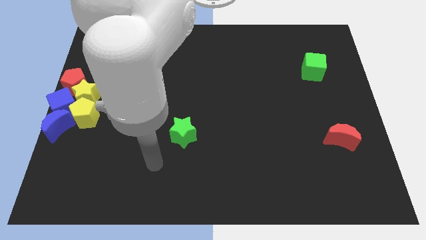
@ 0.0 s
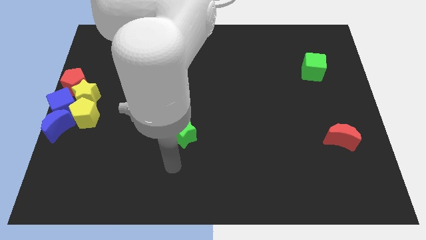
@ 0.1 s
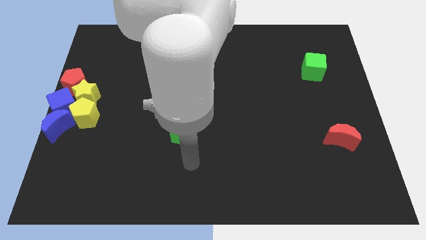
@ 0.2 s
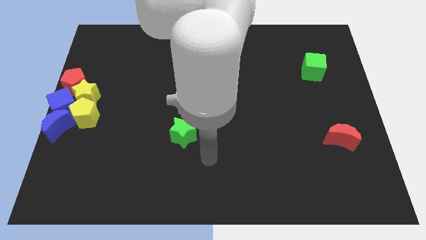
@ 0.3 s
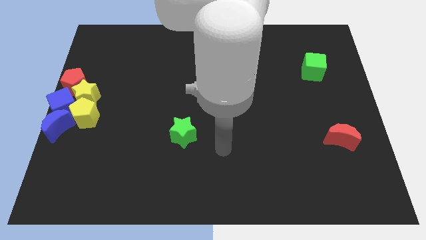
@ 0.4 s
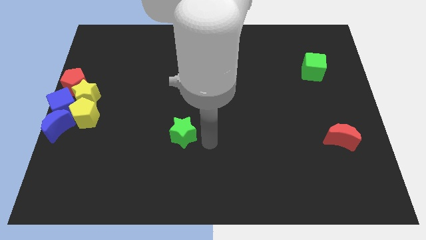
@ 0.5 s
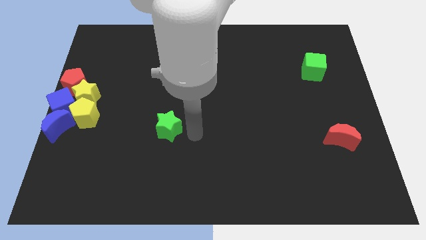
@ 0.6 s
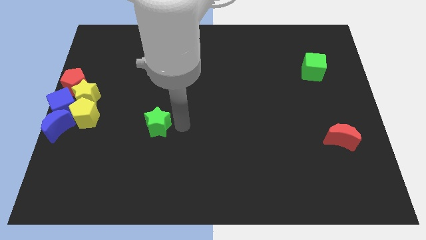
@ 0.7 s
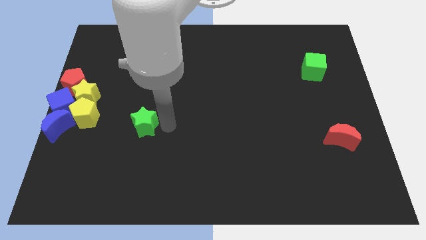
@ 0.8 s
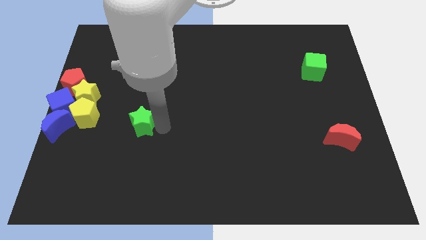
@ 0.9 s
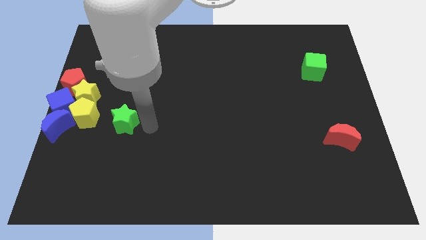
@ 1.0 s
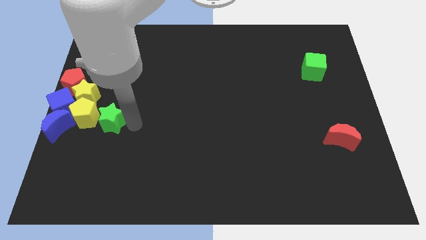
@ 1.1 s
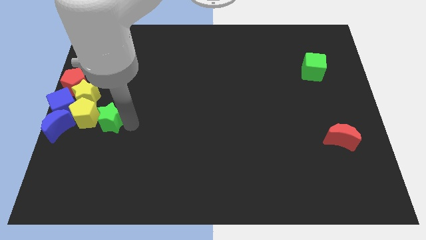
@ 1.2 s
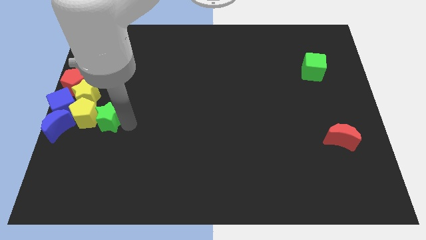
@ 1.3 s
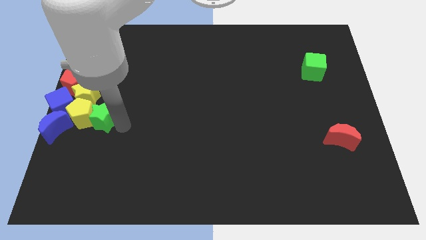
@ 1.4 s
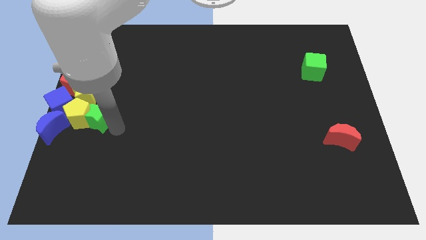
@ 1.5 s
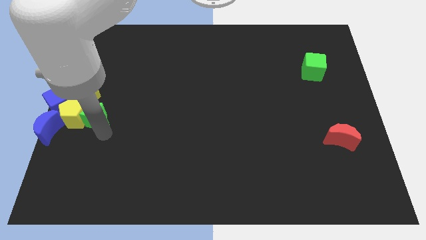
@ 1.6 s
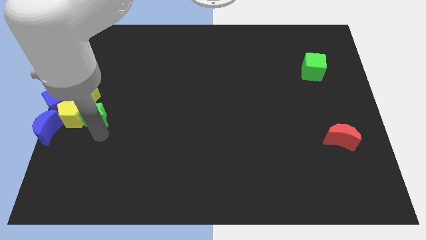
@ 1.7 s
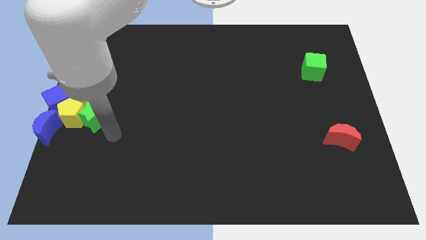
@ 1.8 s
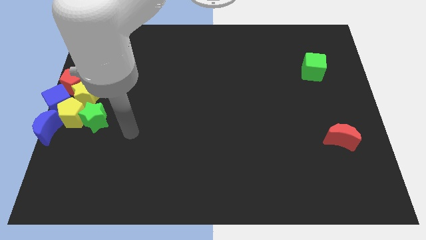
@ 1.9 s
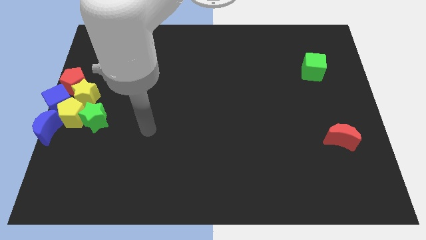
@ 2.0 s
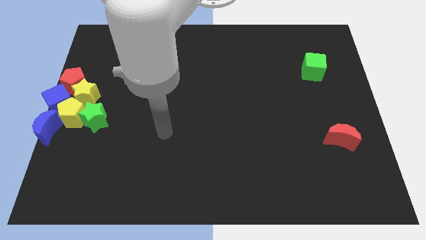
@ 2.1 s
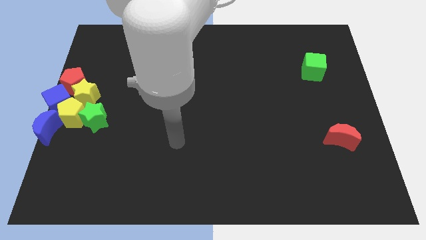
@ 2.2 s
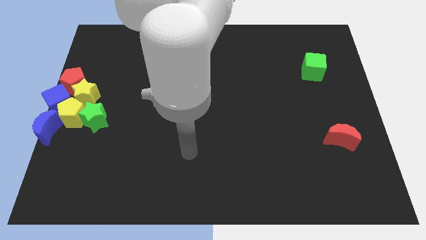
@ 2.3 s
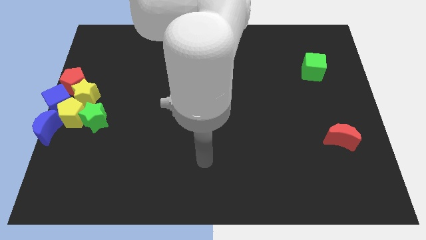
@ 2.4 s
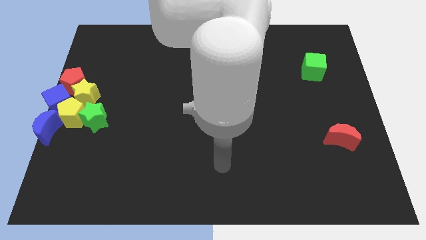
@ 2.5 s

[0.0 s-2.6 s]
push the green star into the group of blocks

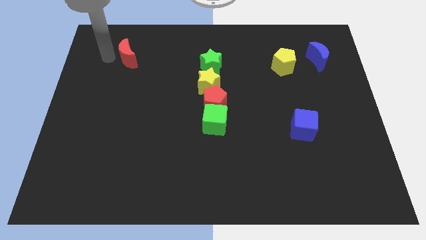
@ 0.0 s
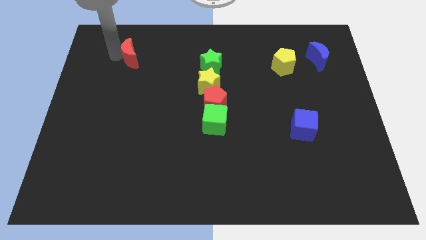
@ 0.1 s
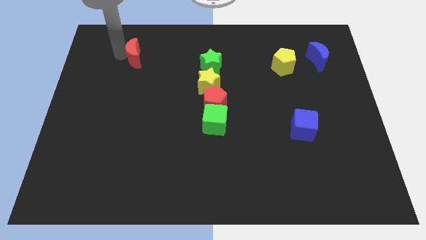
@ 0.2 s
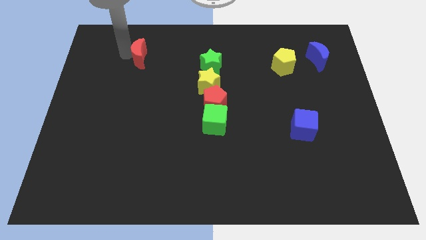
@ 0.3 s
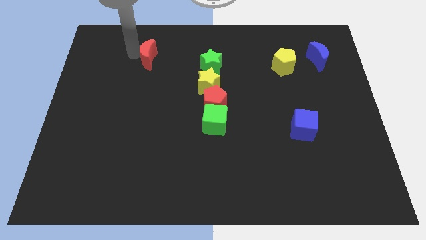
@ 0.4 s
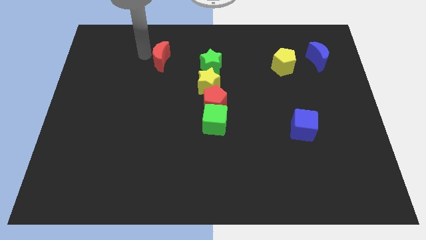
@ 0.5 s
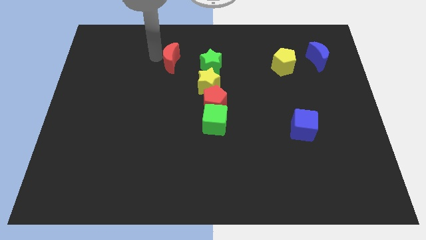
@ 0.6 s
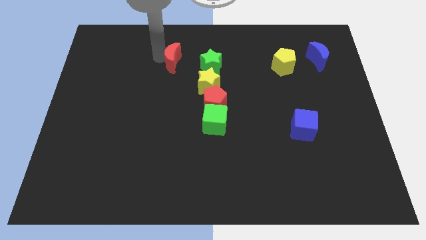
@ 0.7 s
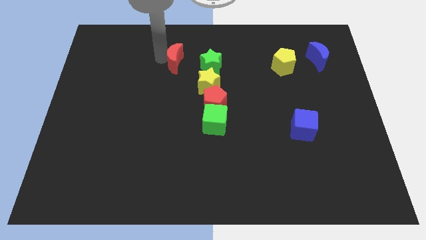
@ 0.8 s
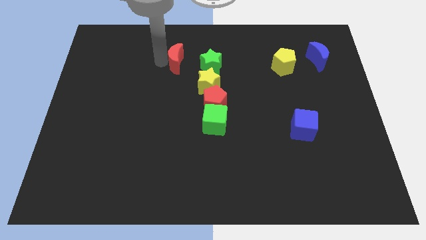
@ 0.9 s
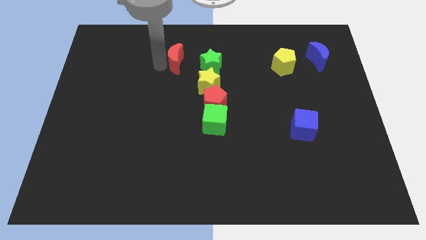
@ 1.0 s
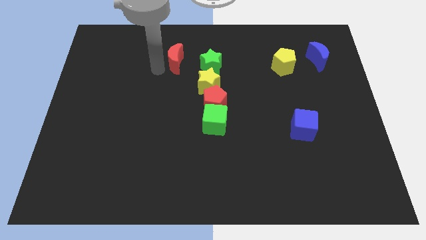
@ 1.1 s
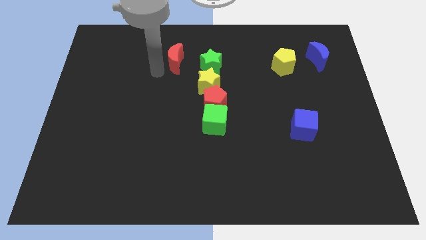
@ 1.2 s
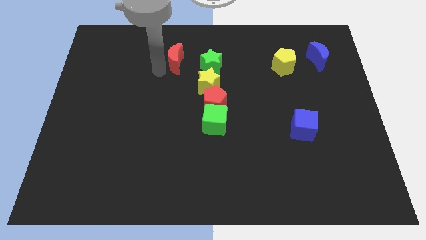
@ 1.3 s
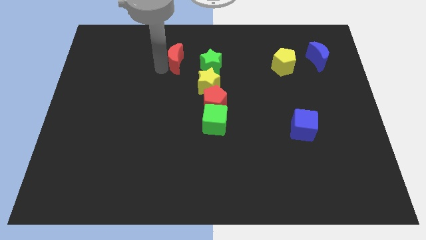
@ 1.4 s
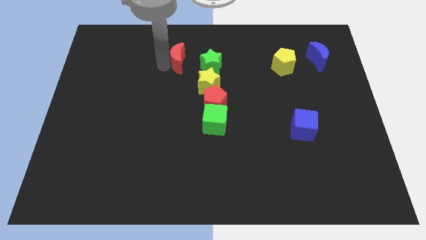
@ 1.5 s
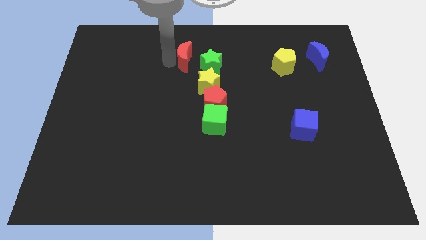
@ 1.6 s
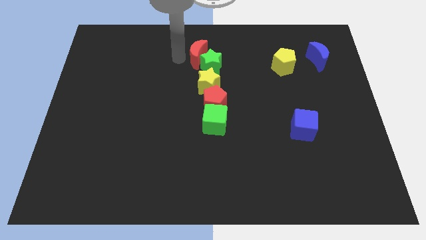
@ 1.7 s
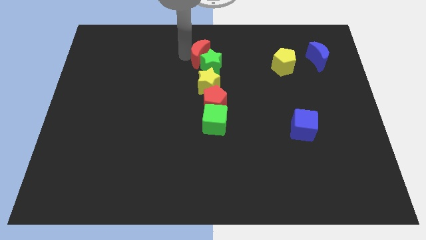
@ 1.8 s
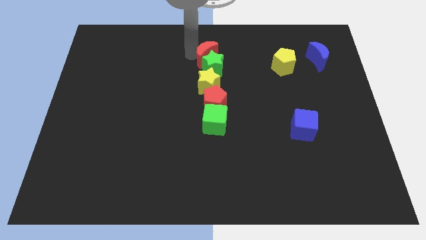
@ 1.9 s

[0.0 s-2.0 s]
place red moon to the left of green star

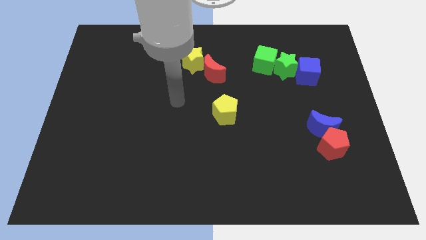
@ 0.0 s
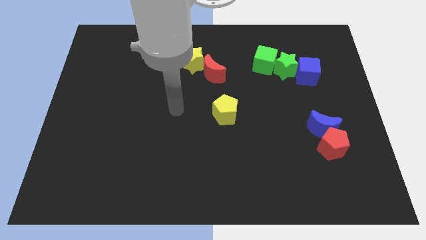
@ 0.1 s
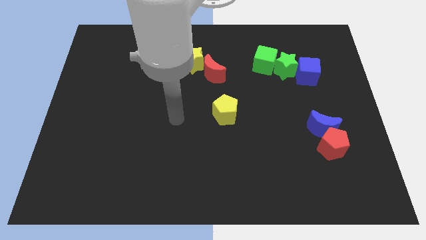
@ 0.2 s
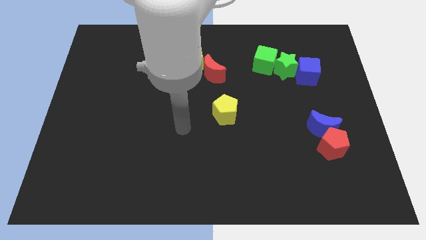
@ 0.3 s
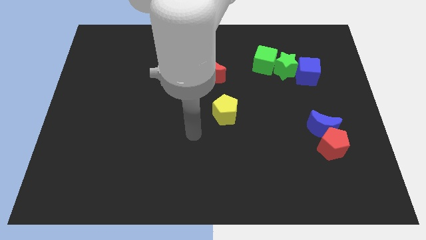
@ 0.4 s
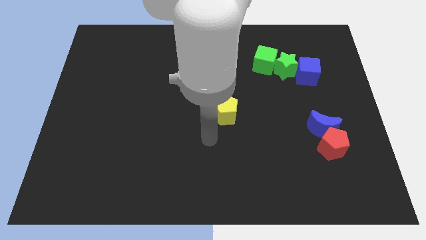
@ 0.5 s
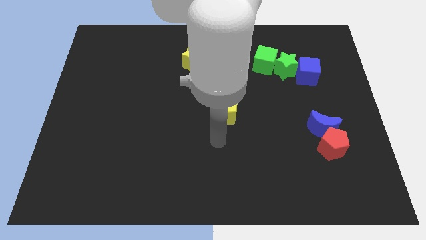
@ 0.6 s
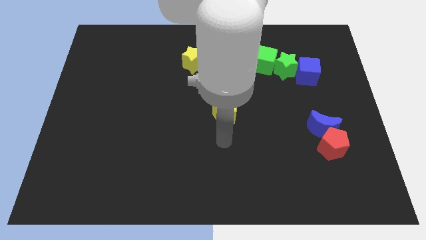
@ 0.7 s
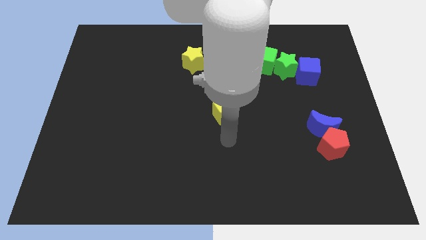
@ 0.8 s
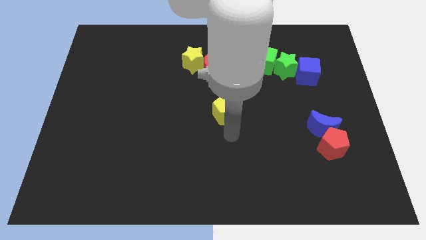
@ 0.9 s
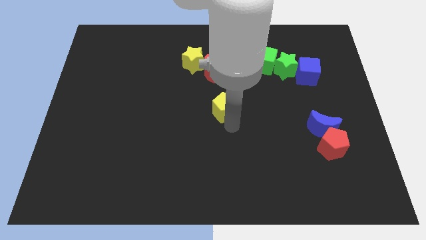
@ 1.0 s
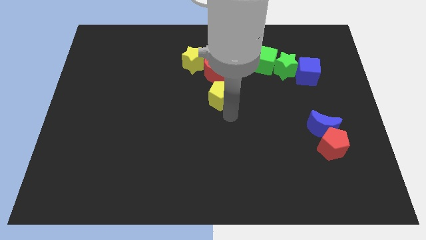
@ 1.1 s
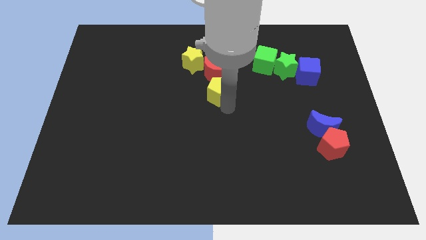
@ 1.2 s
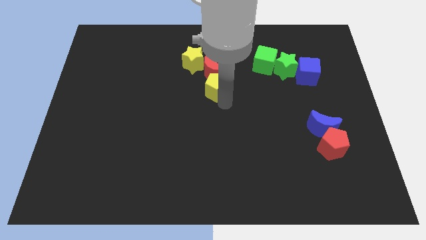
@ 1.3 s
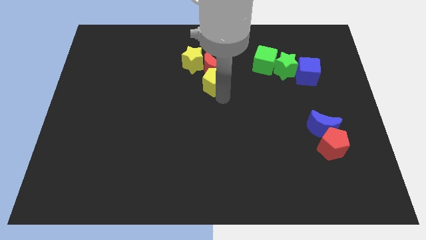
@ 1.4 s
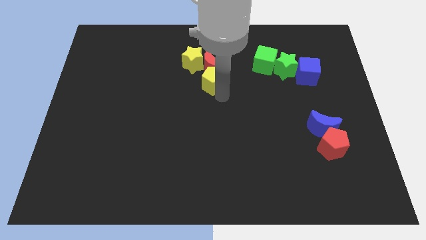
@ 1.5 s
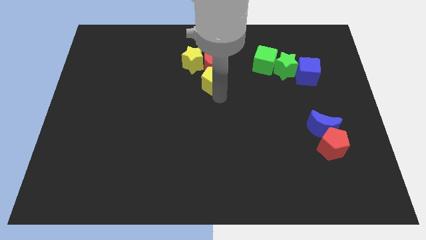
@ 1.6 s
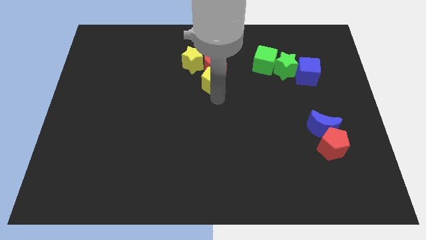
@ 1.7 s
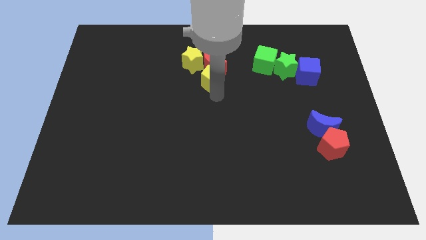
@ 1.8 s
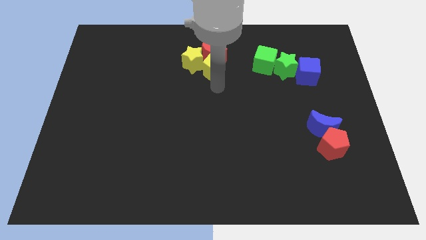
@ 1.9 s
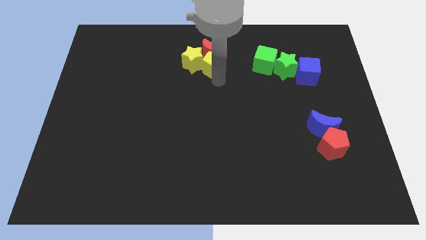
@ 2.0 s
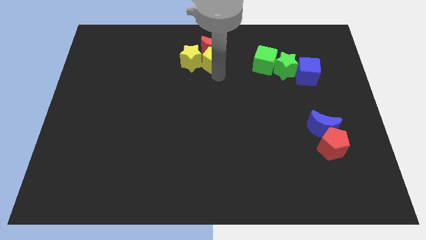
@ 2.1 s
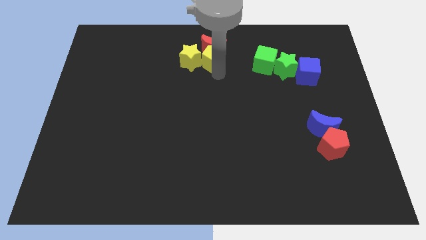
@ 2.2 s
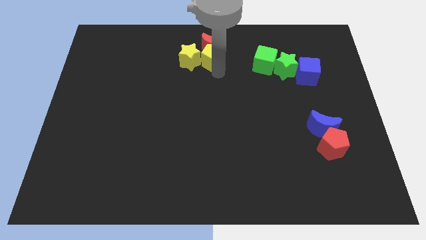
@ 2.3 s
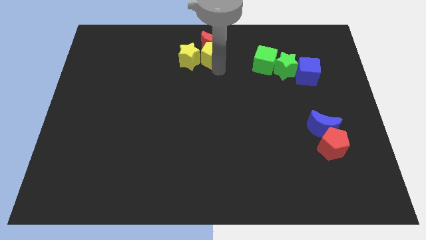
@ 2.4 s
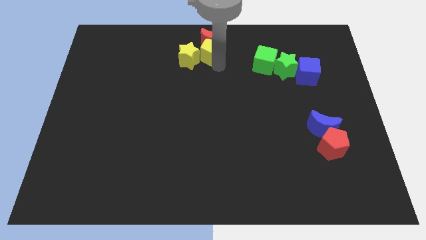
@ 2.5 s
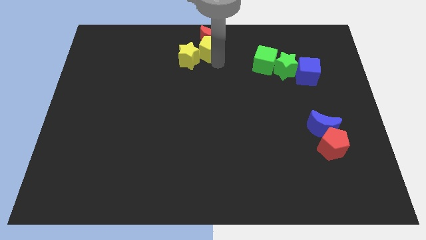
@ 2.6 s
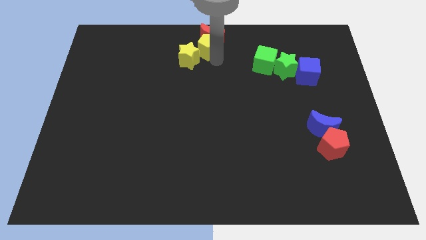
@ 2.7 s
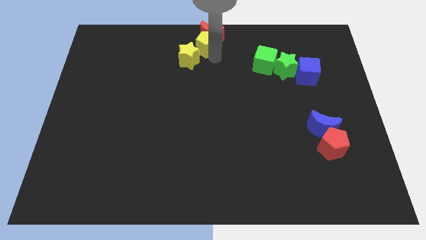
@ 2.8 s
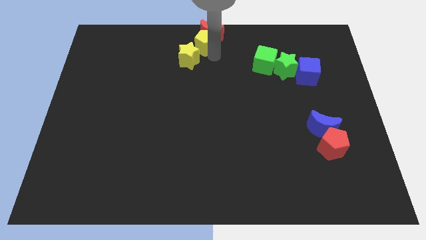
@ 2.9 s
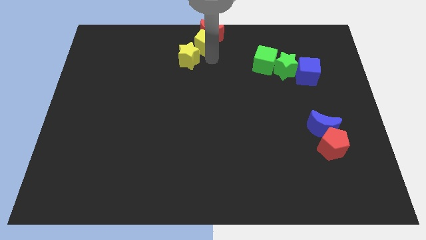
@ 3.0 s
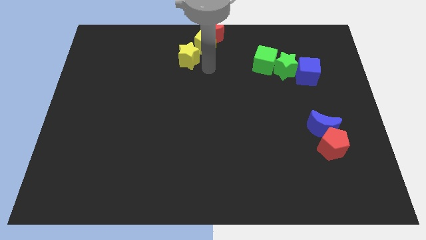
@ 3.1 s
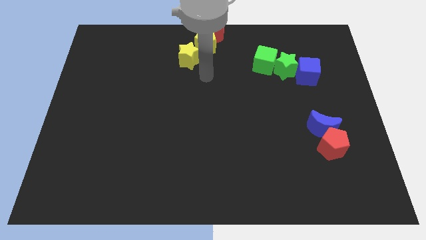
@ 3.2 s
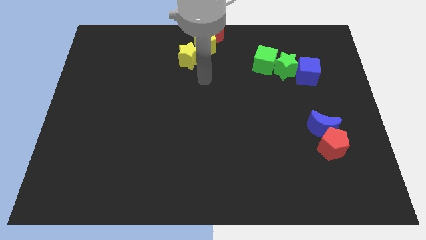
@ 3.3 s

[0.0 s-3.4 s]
push the red crescent towards the top center of the board using the yellow pentagon

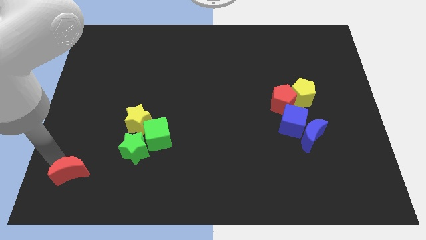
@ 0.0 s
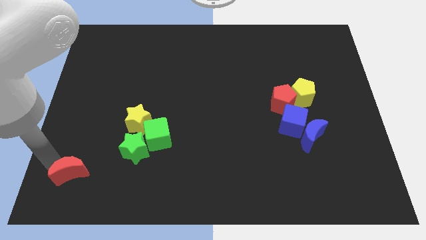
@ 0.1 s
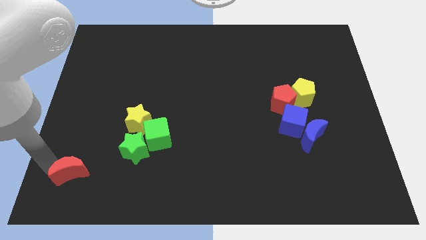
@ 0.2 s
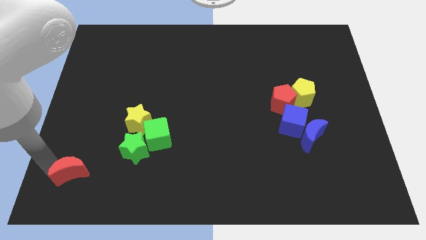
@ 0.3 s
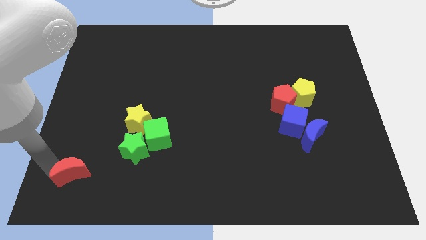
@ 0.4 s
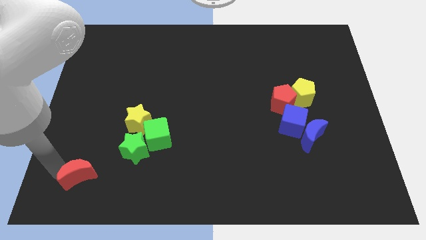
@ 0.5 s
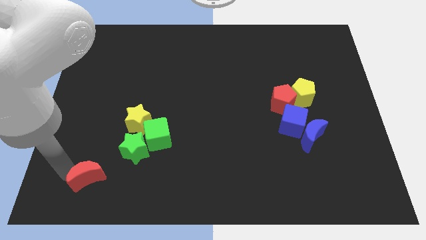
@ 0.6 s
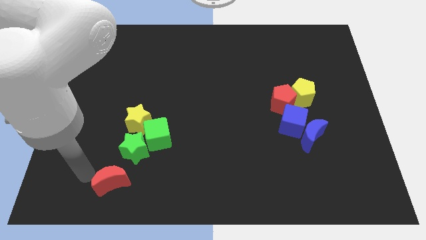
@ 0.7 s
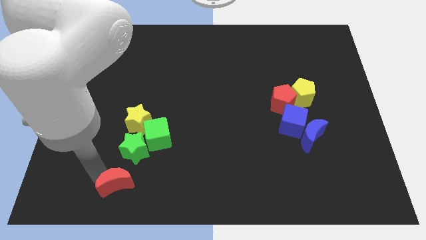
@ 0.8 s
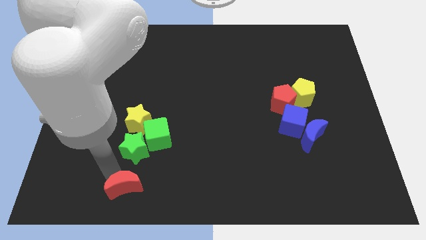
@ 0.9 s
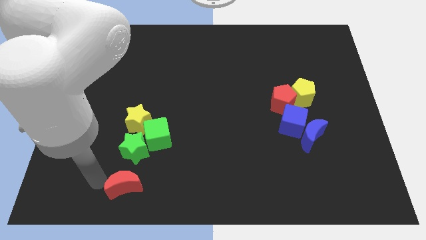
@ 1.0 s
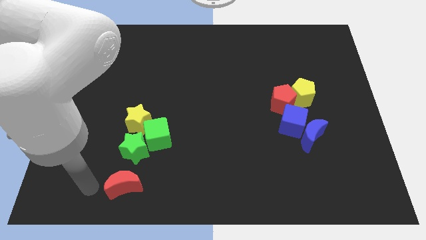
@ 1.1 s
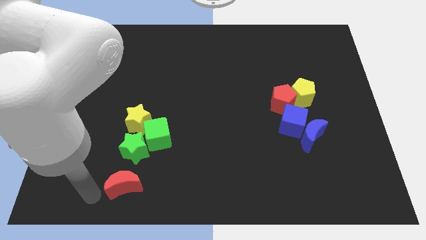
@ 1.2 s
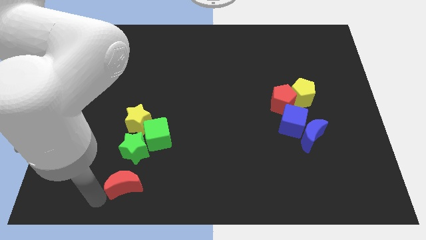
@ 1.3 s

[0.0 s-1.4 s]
move the red moon below the green star
